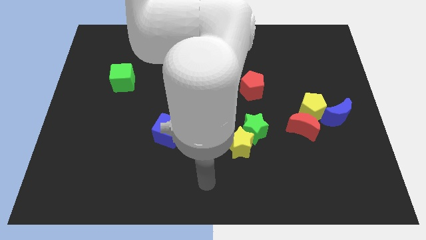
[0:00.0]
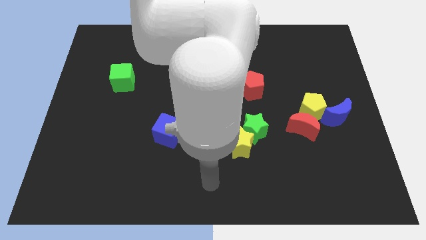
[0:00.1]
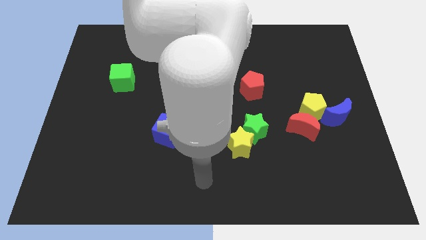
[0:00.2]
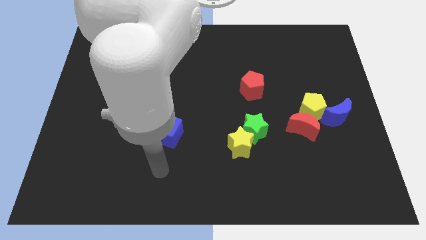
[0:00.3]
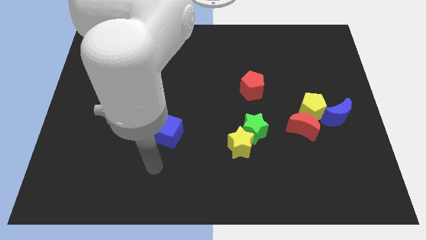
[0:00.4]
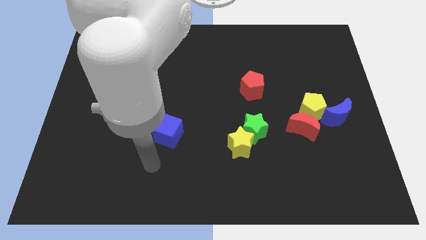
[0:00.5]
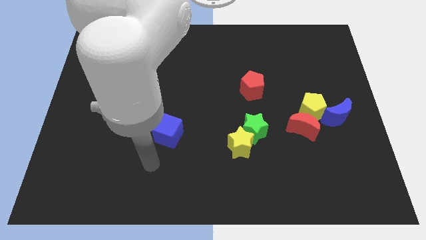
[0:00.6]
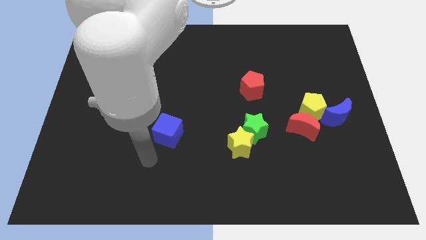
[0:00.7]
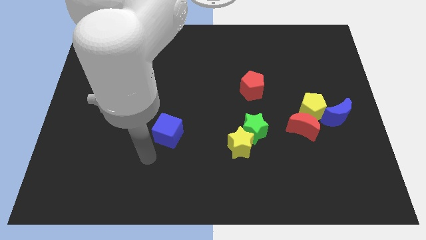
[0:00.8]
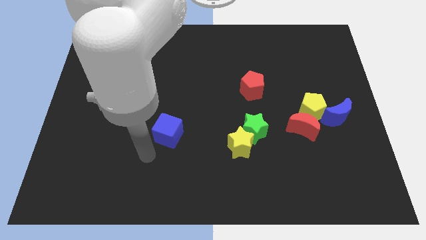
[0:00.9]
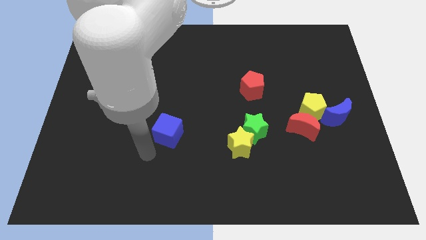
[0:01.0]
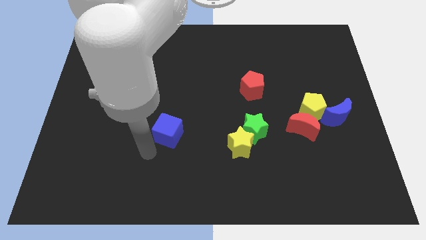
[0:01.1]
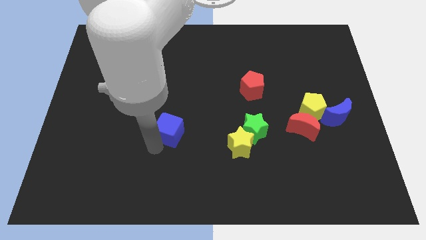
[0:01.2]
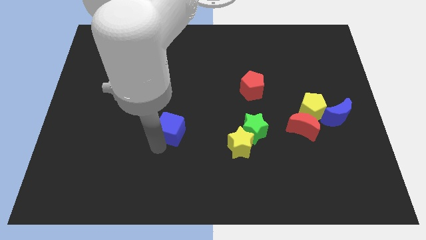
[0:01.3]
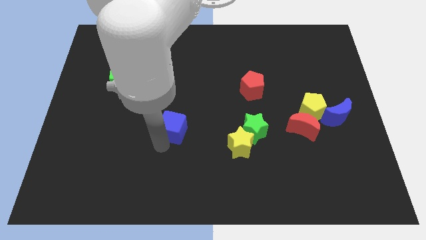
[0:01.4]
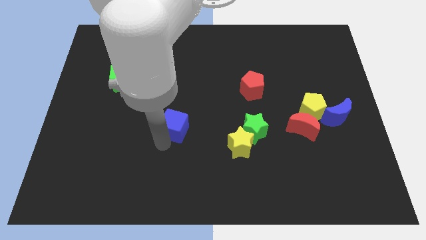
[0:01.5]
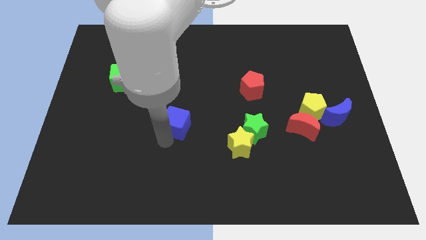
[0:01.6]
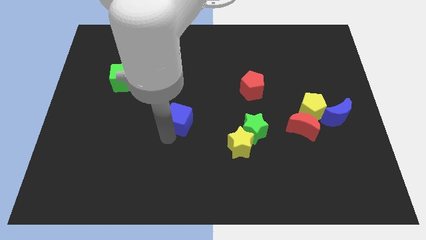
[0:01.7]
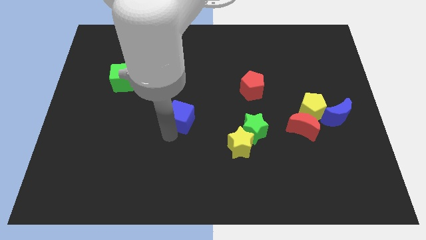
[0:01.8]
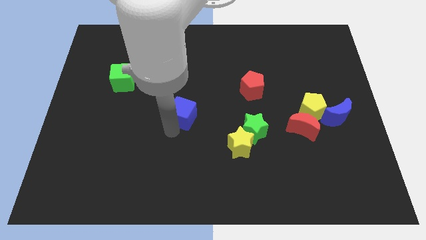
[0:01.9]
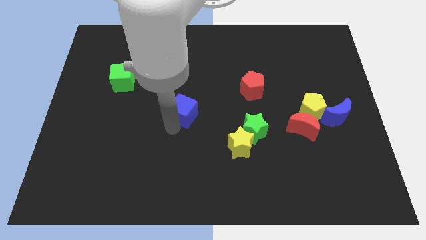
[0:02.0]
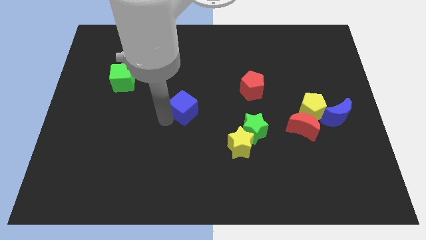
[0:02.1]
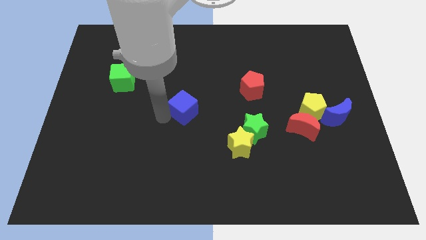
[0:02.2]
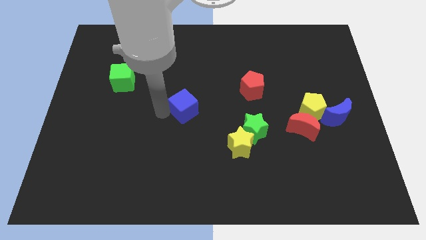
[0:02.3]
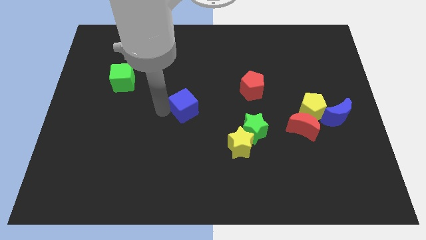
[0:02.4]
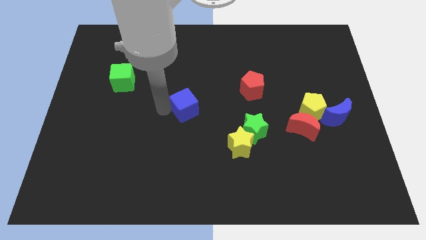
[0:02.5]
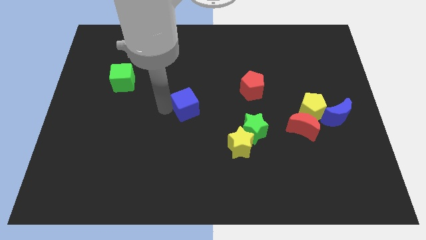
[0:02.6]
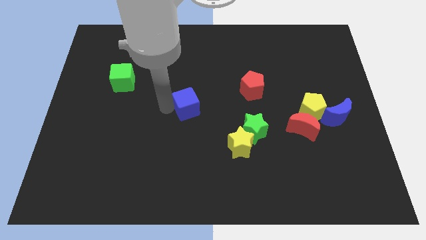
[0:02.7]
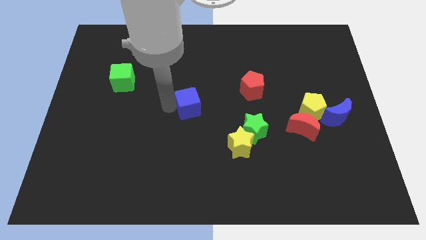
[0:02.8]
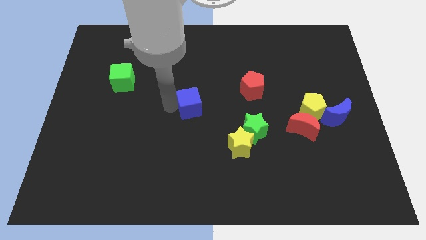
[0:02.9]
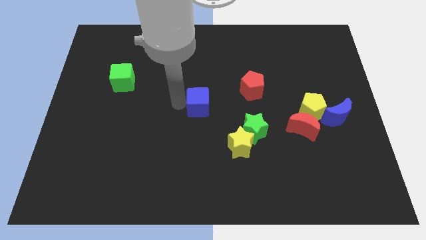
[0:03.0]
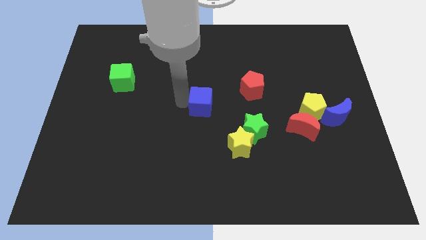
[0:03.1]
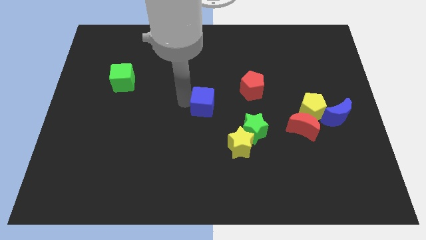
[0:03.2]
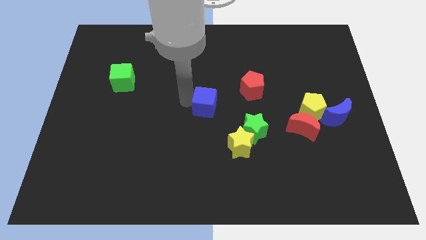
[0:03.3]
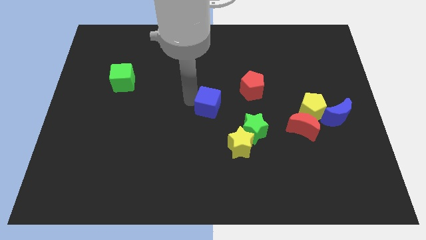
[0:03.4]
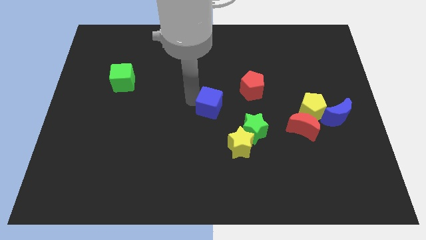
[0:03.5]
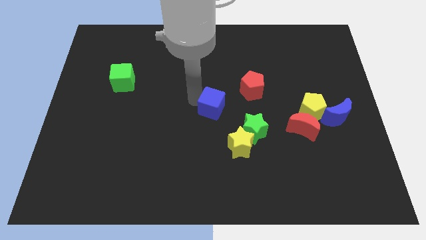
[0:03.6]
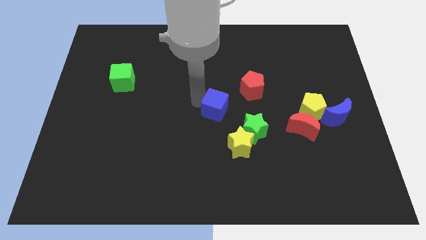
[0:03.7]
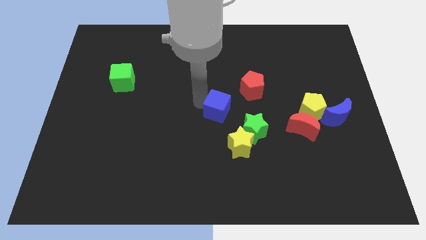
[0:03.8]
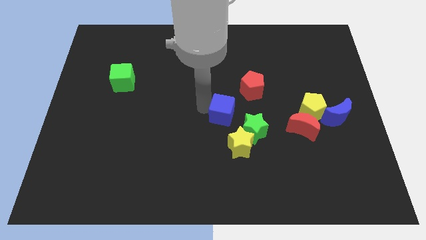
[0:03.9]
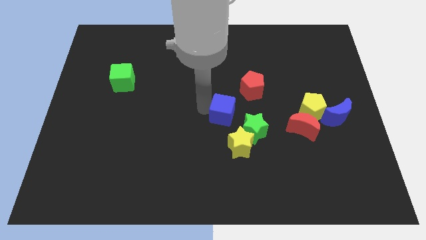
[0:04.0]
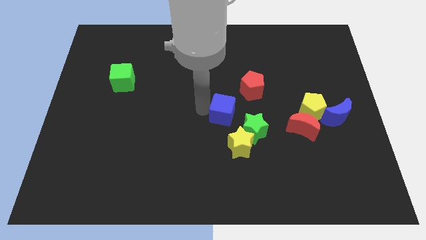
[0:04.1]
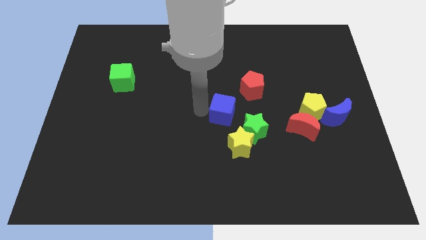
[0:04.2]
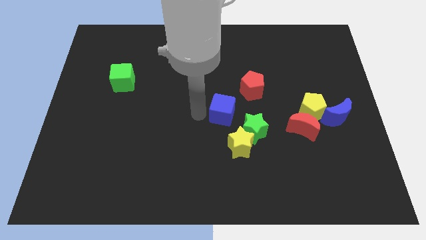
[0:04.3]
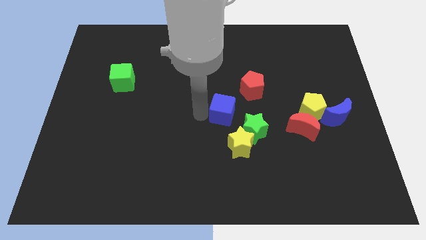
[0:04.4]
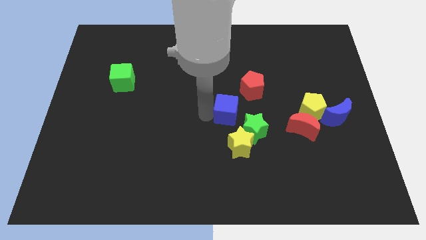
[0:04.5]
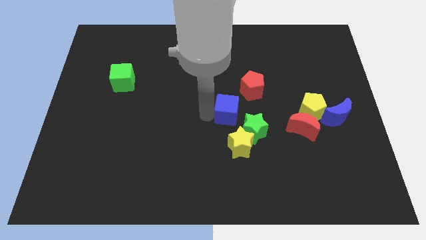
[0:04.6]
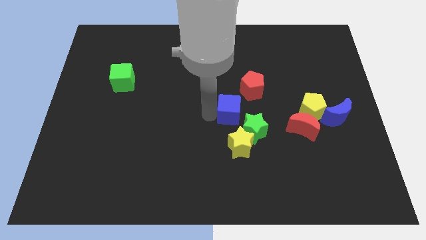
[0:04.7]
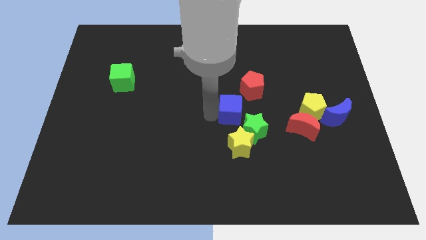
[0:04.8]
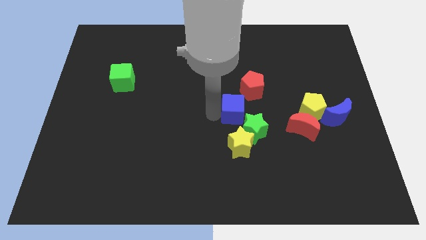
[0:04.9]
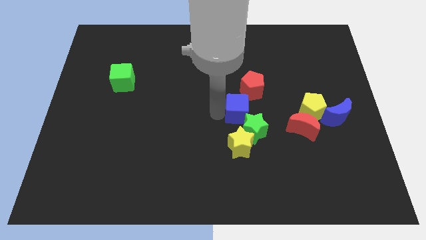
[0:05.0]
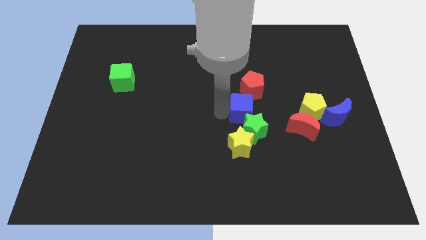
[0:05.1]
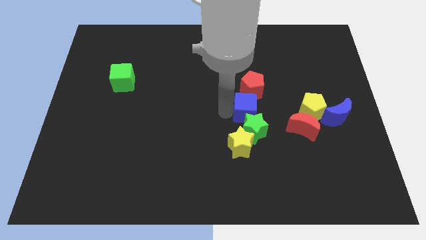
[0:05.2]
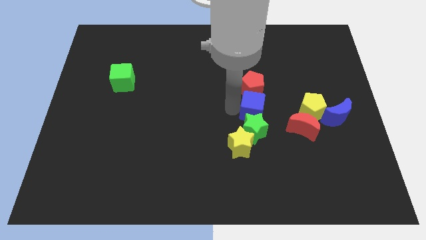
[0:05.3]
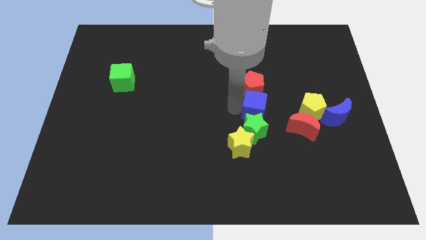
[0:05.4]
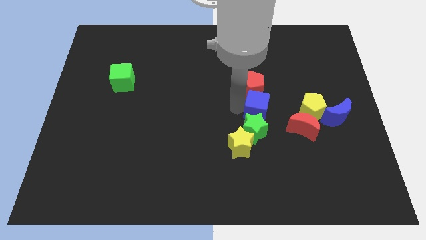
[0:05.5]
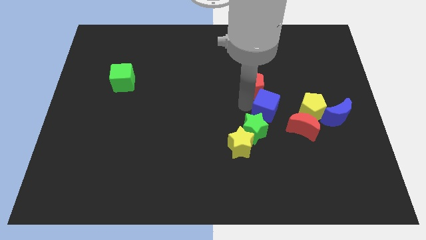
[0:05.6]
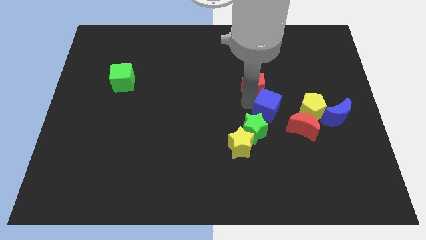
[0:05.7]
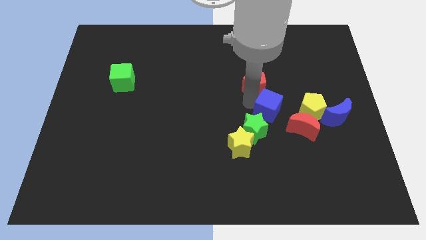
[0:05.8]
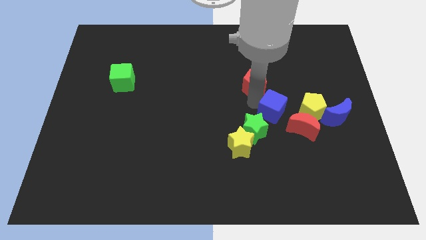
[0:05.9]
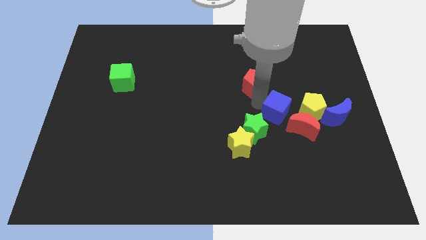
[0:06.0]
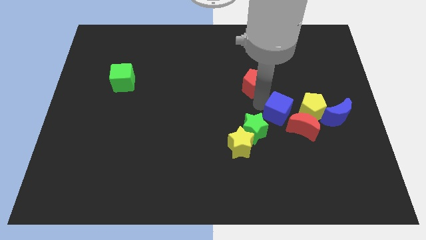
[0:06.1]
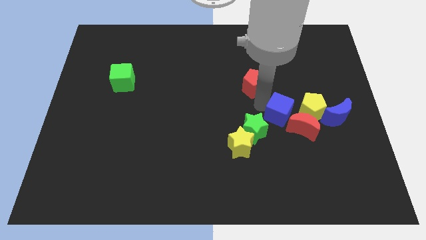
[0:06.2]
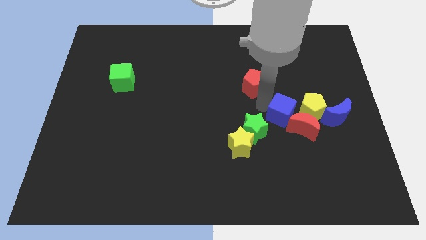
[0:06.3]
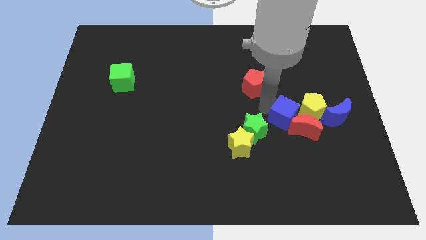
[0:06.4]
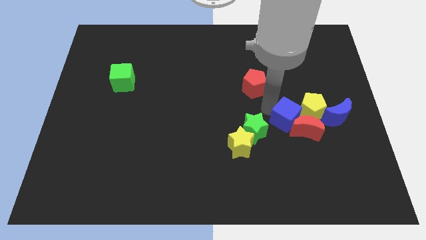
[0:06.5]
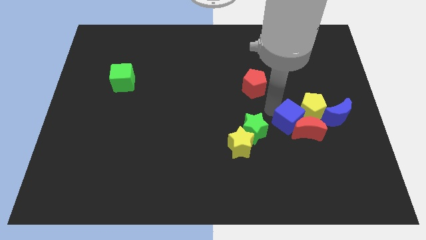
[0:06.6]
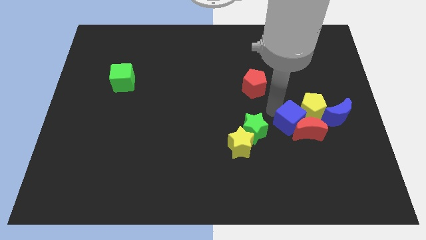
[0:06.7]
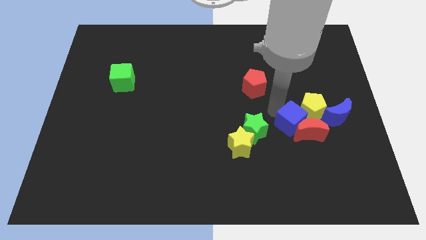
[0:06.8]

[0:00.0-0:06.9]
push the blue cube to the yellow pentagon

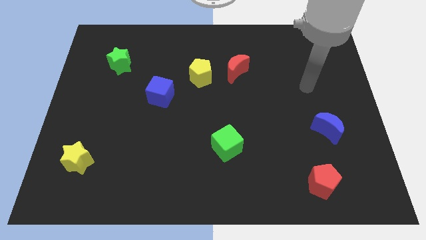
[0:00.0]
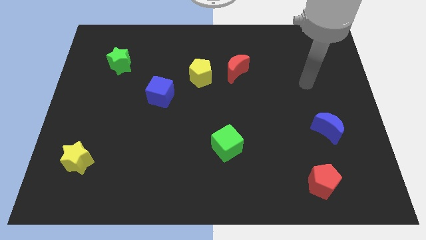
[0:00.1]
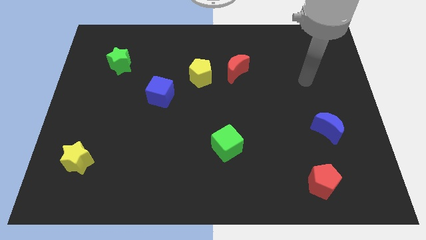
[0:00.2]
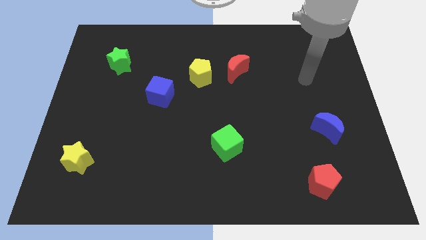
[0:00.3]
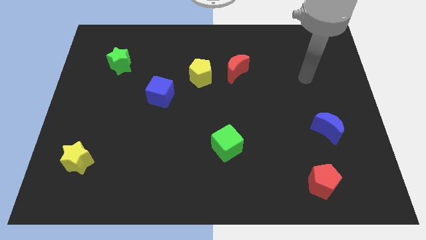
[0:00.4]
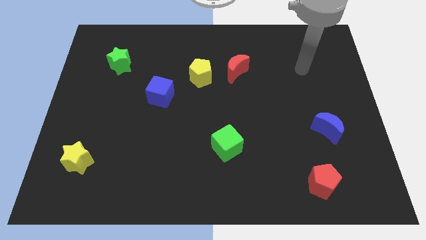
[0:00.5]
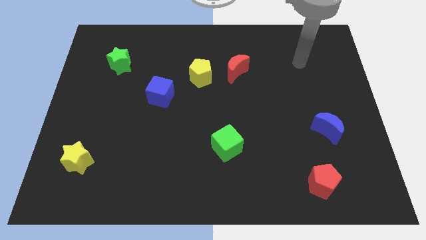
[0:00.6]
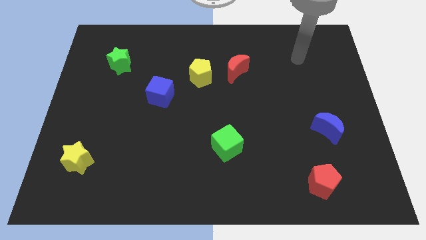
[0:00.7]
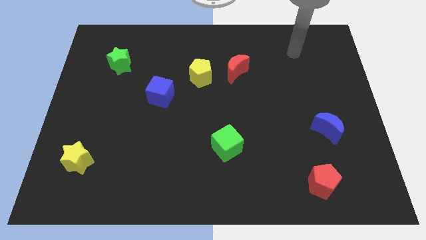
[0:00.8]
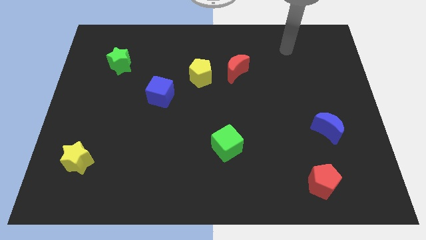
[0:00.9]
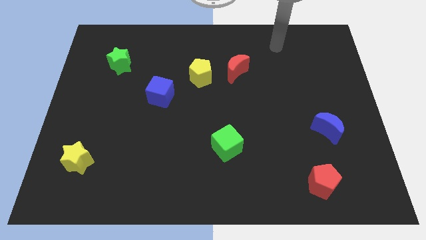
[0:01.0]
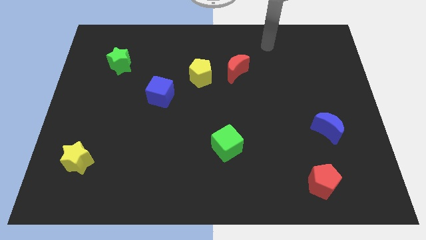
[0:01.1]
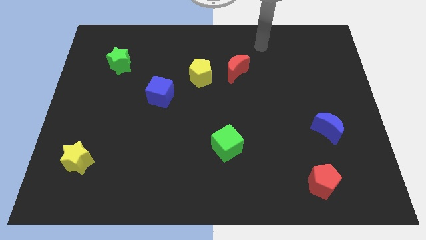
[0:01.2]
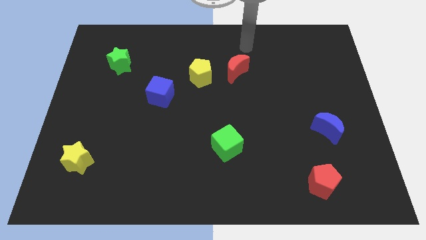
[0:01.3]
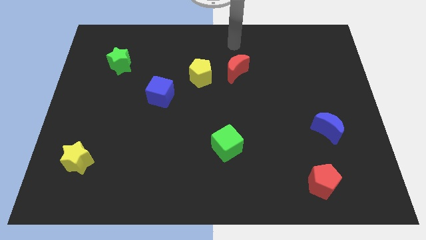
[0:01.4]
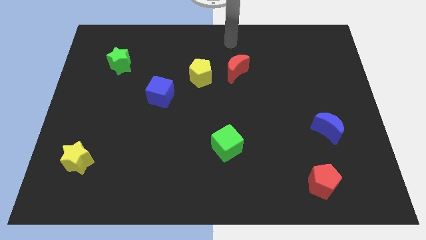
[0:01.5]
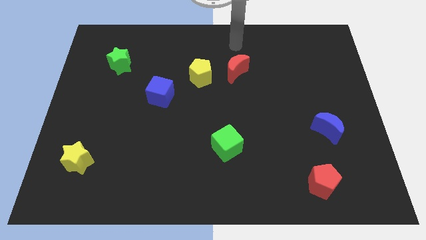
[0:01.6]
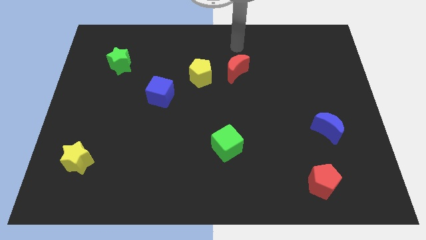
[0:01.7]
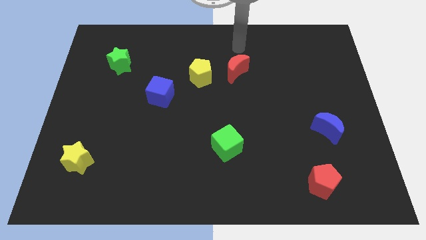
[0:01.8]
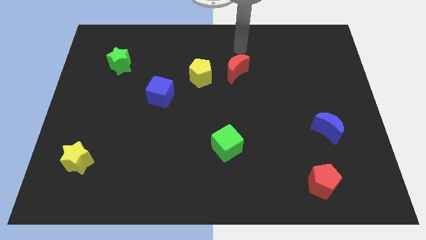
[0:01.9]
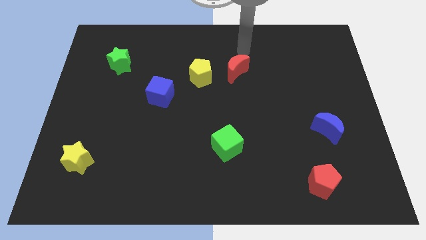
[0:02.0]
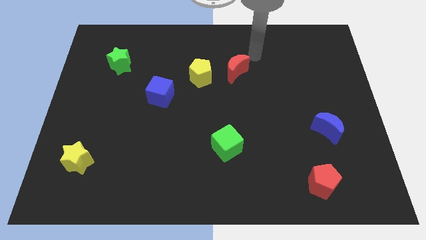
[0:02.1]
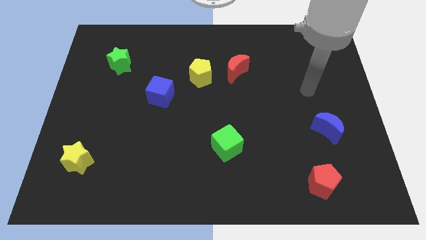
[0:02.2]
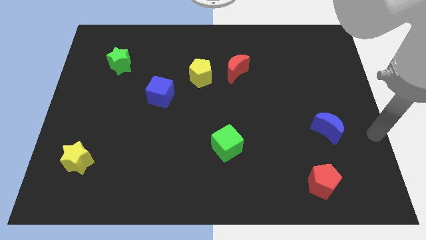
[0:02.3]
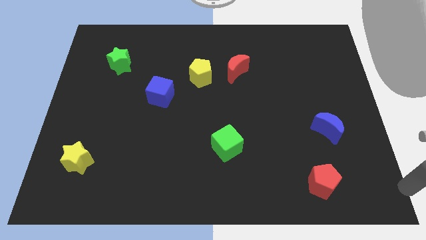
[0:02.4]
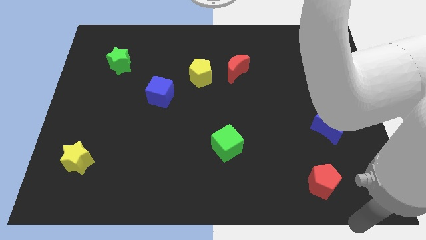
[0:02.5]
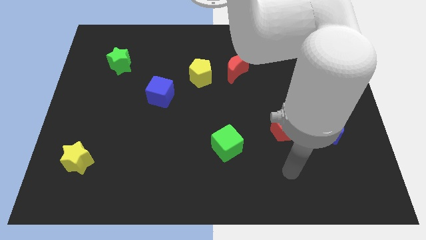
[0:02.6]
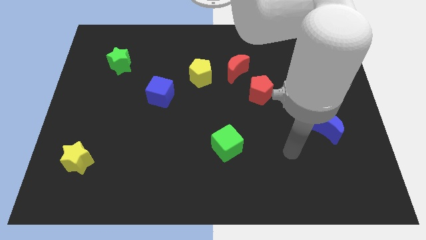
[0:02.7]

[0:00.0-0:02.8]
push the blue cube next to the blue moon
